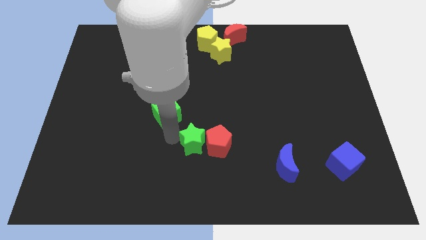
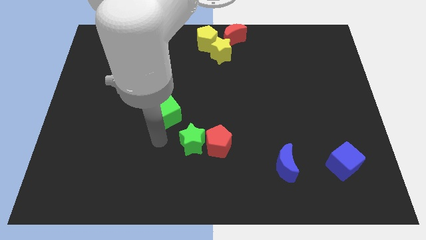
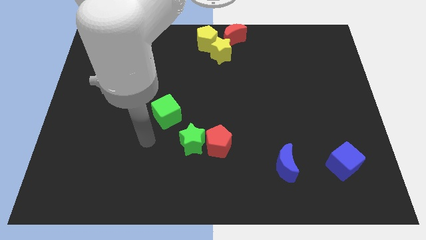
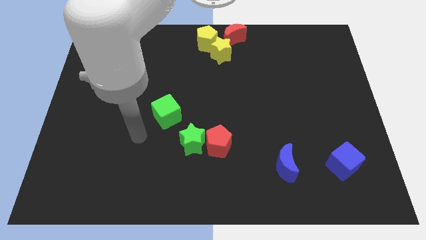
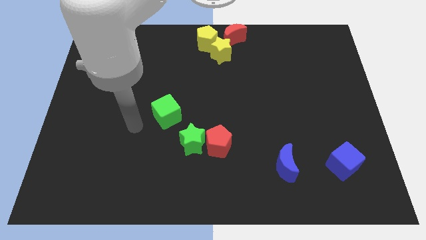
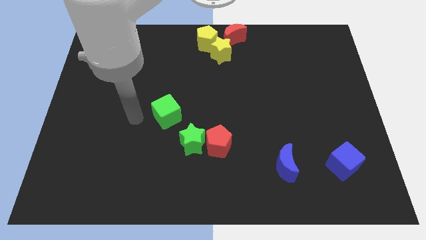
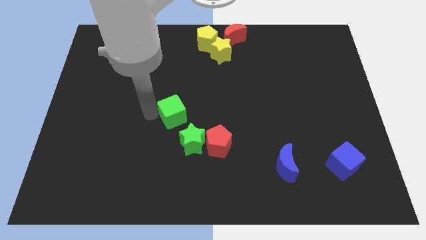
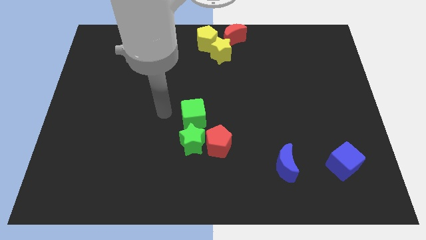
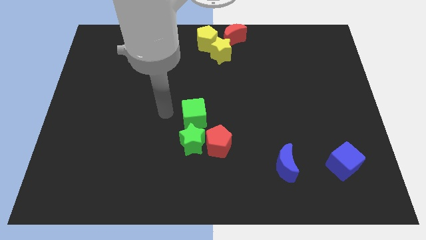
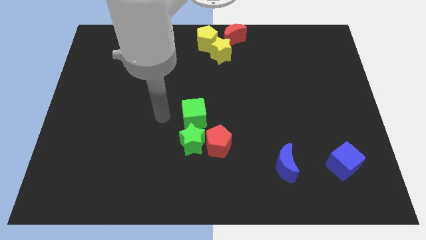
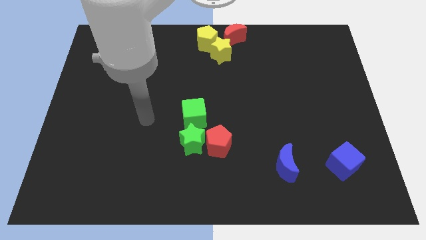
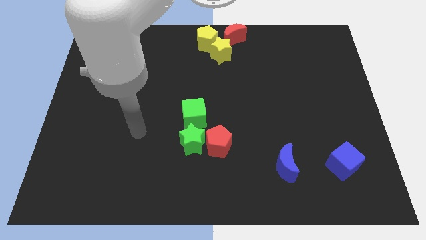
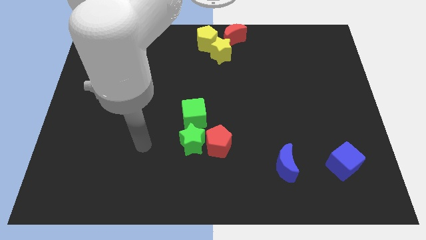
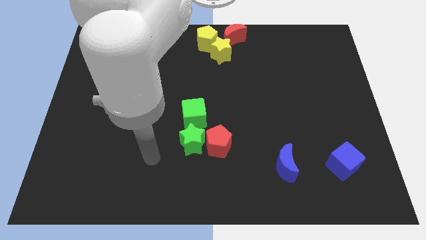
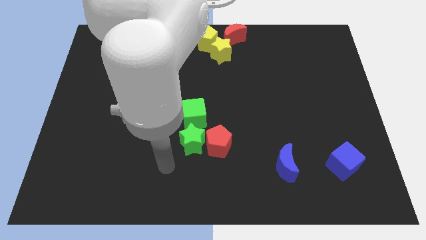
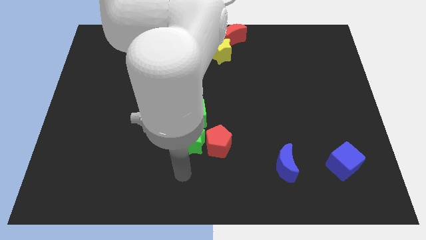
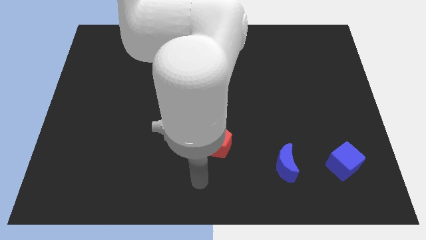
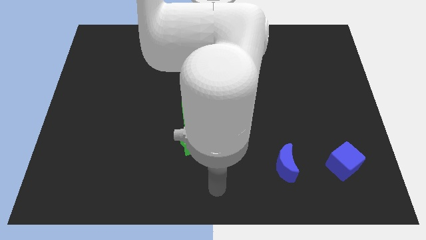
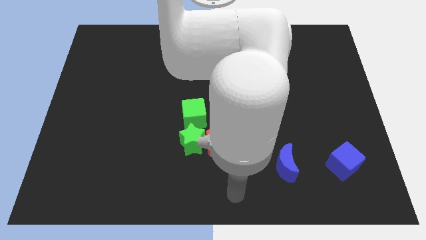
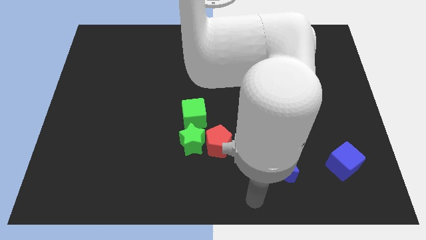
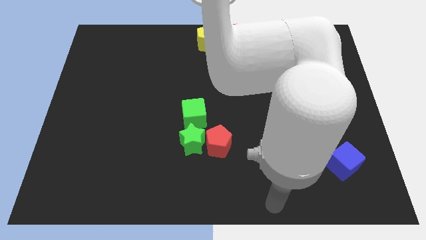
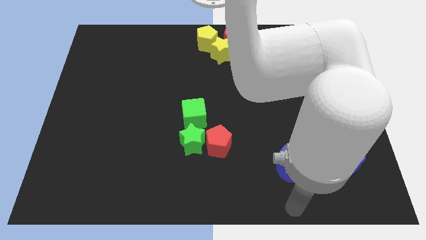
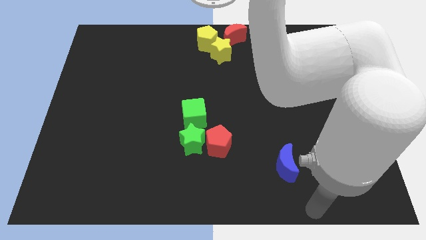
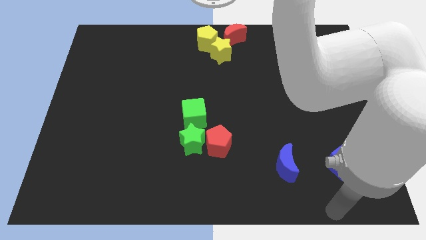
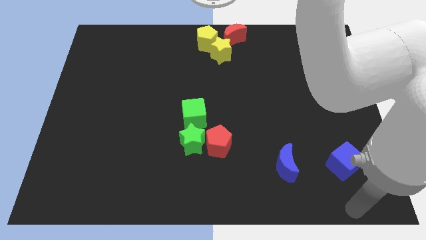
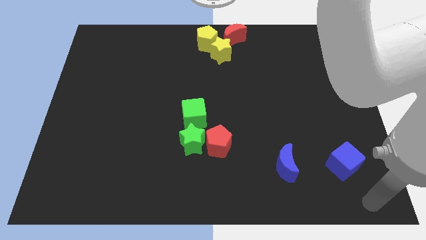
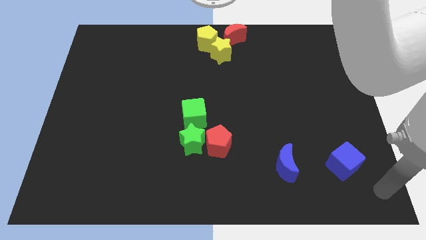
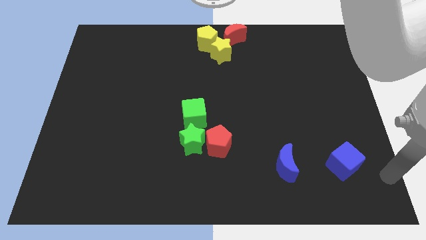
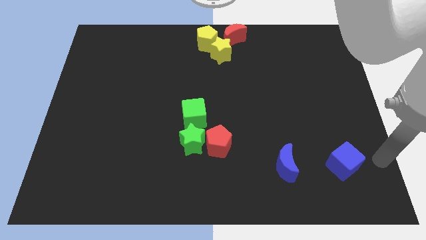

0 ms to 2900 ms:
put the green cube above the green star

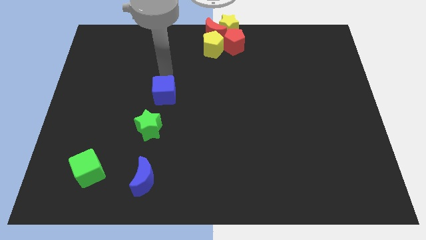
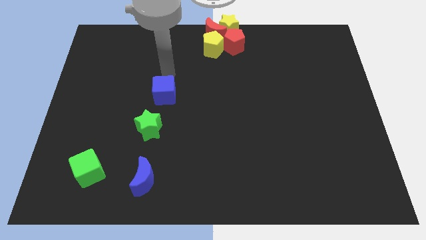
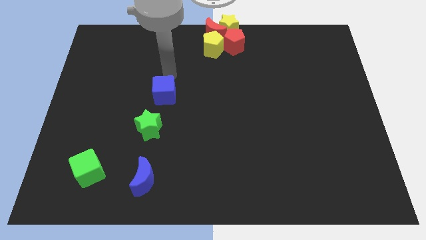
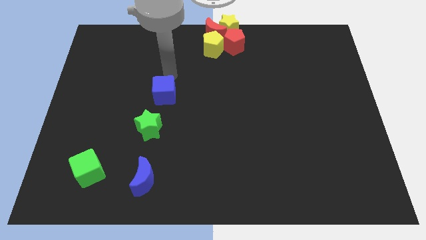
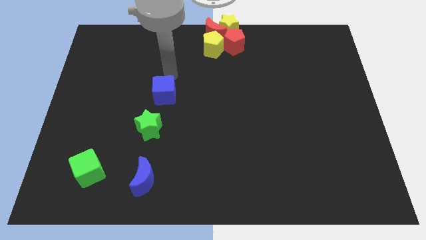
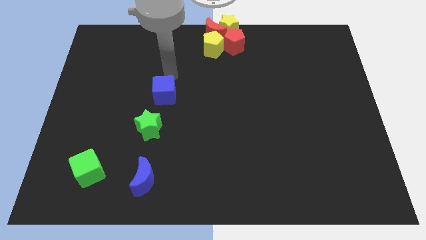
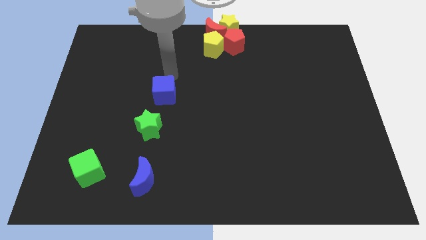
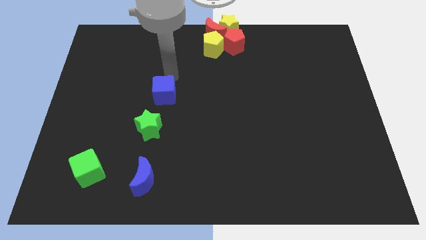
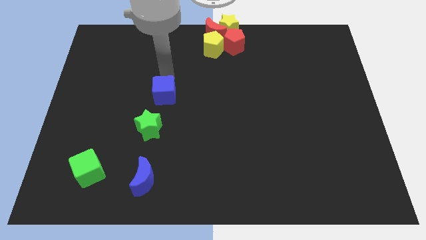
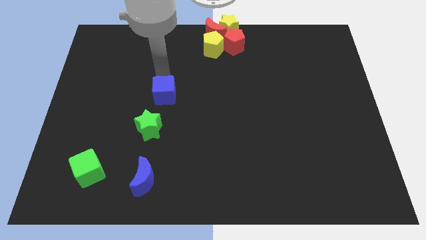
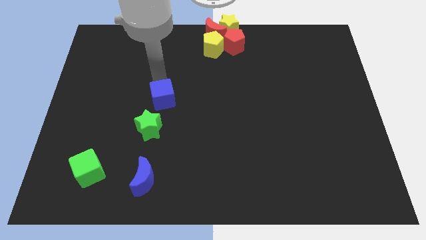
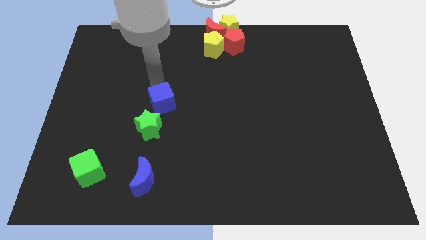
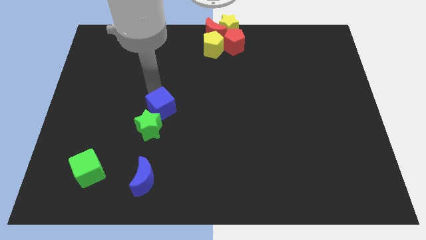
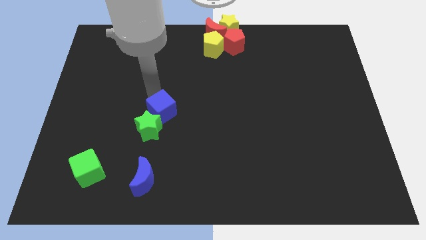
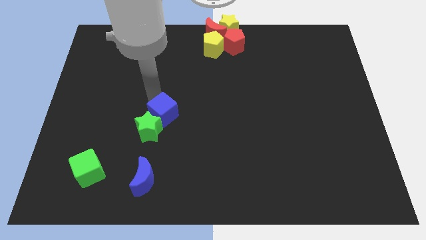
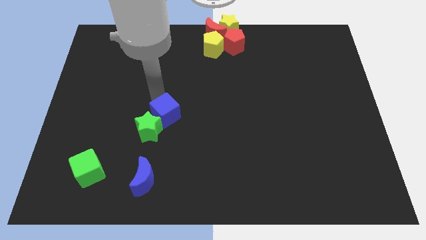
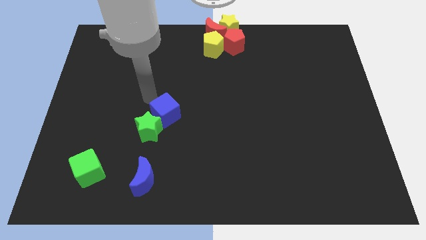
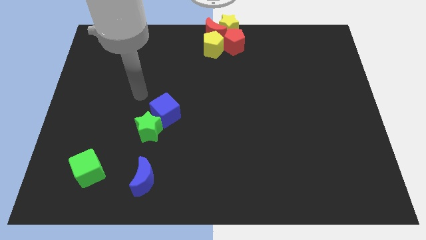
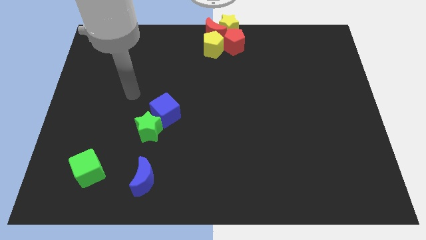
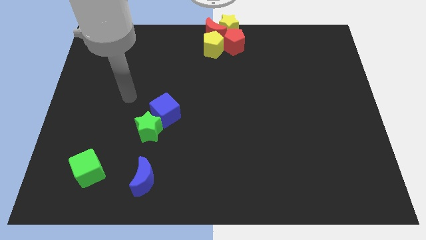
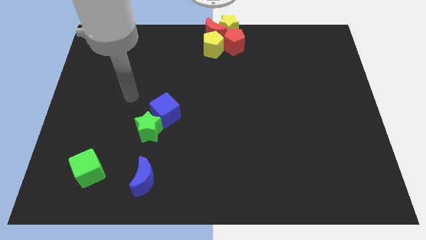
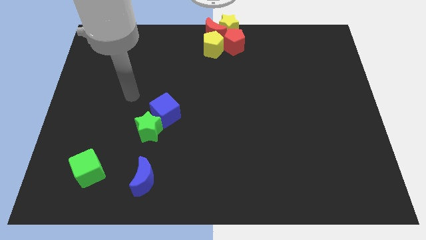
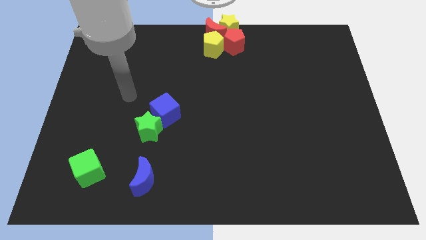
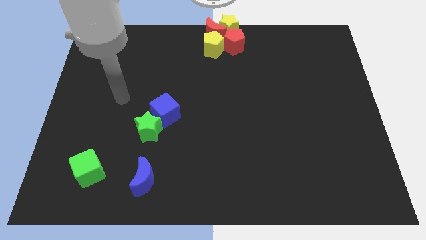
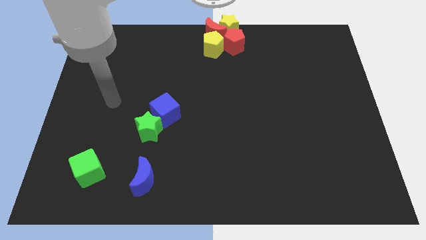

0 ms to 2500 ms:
push the blue cube into the green star

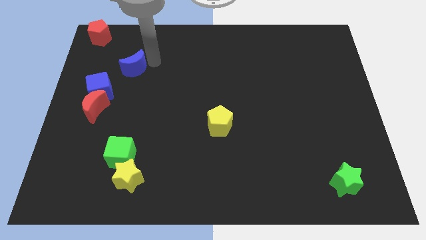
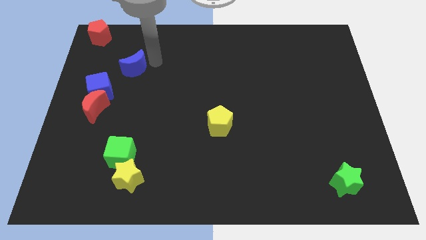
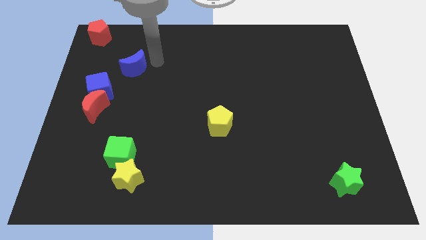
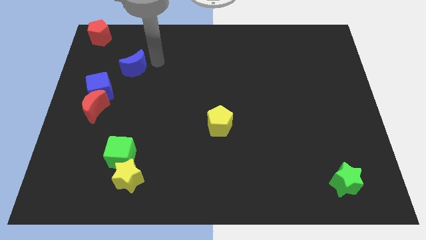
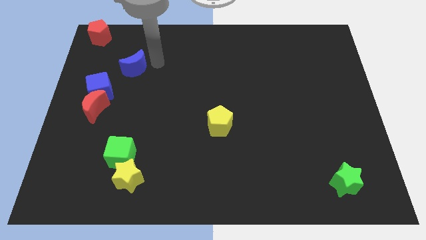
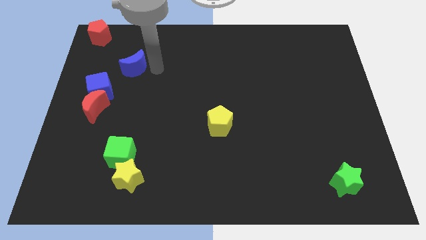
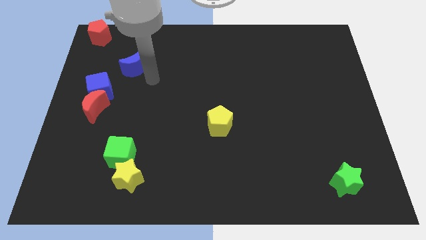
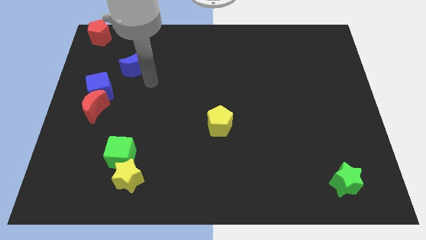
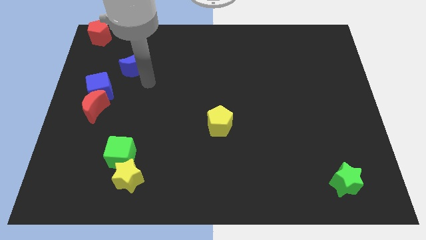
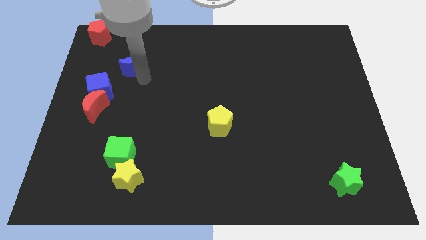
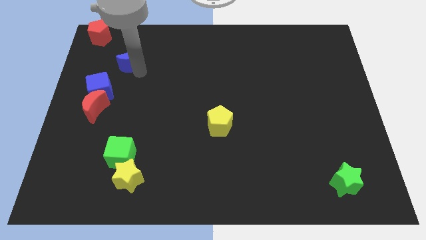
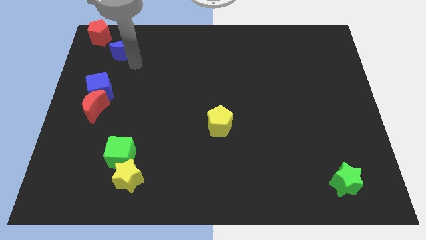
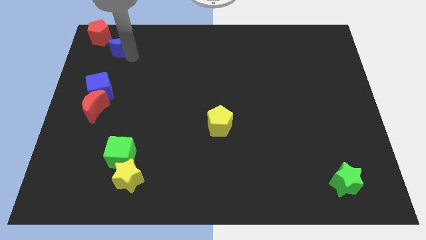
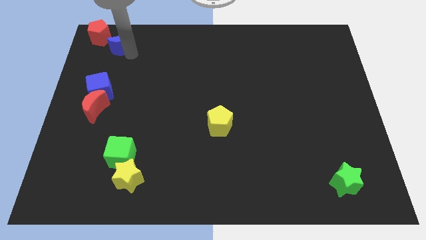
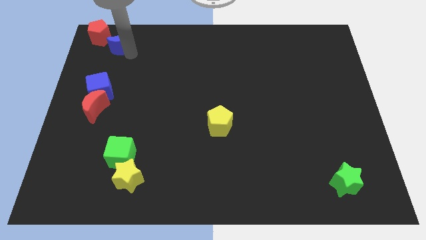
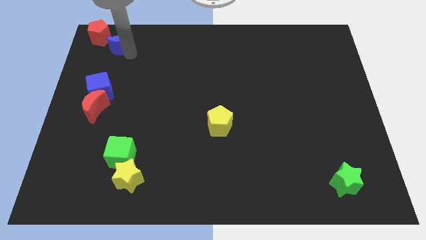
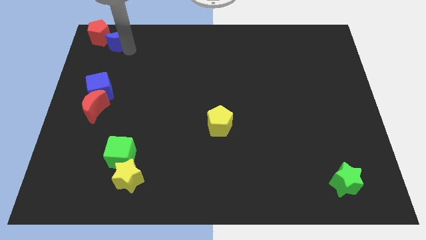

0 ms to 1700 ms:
push the blue moon slightly upwards

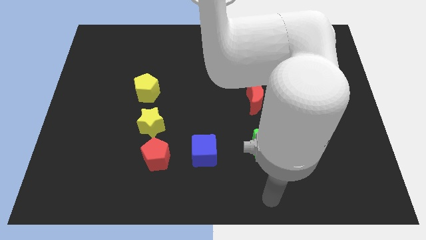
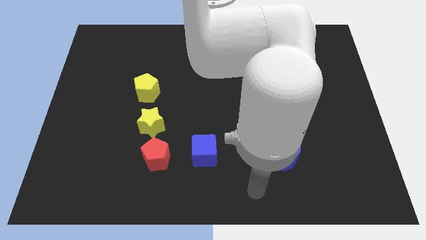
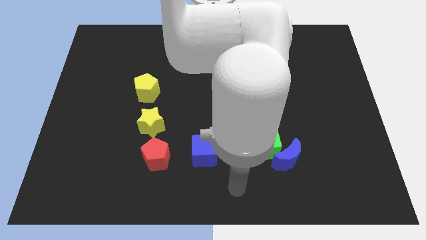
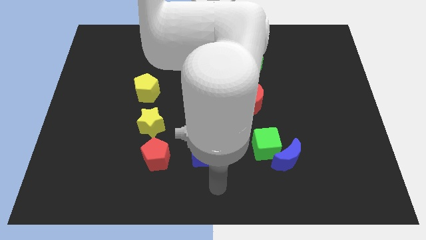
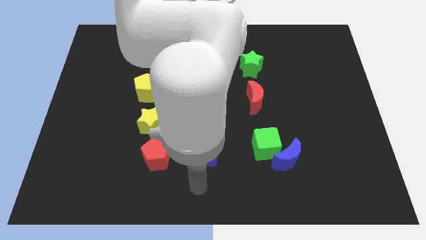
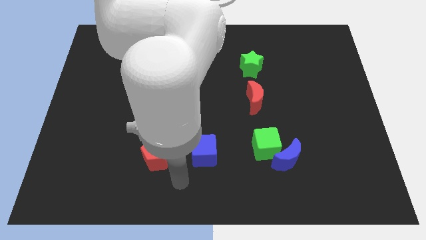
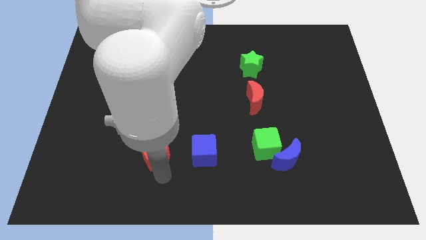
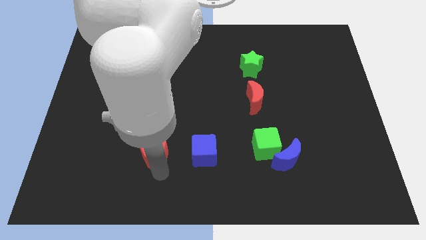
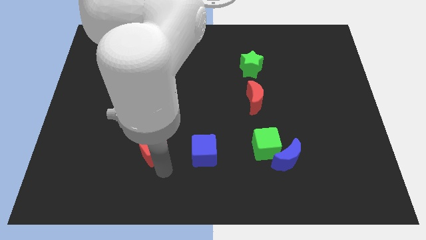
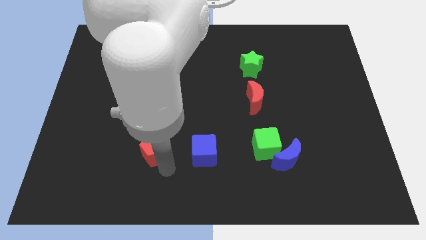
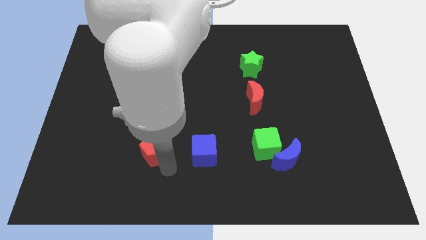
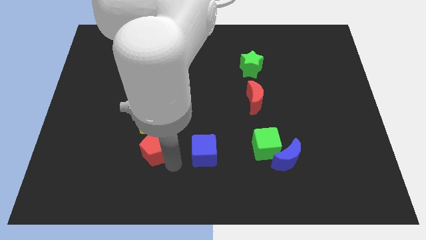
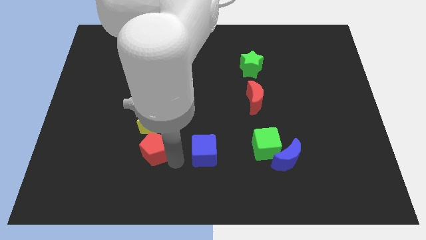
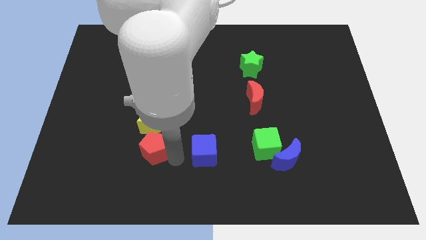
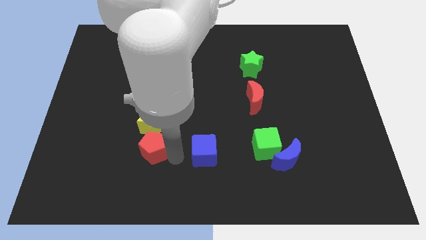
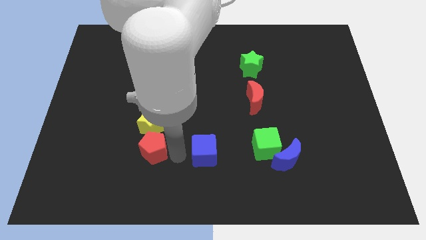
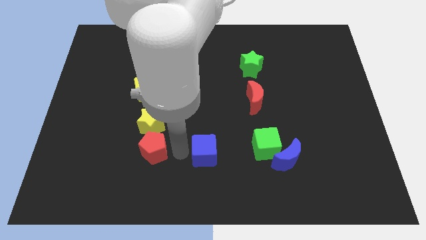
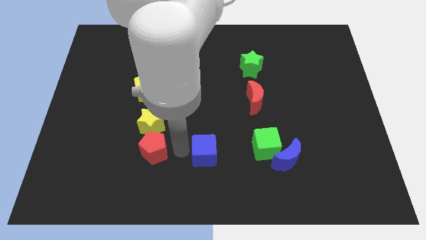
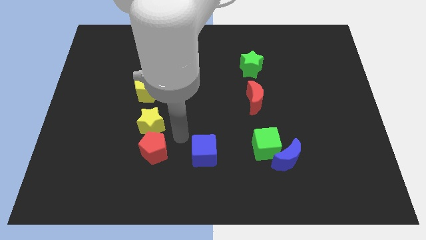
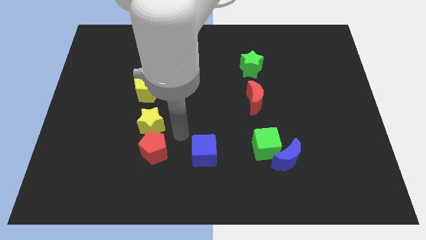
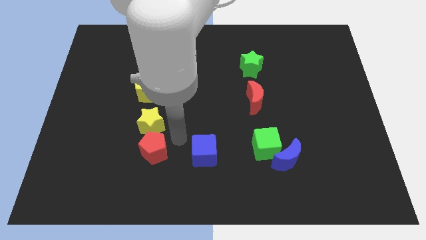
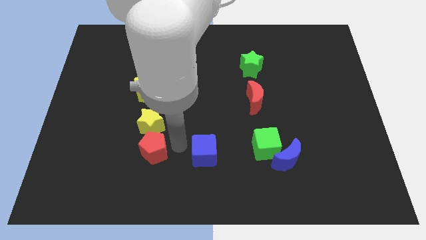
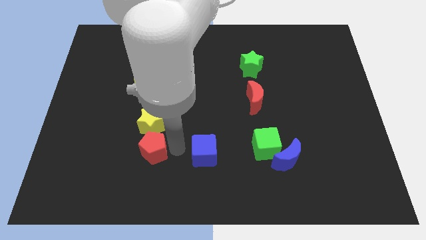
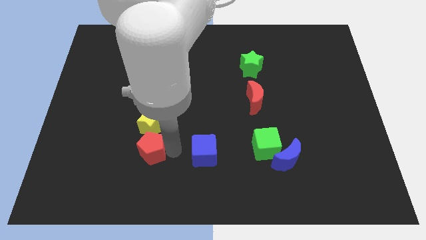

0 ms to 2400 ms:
place your arm right of red pentagon
